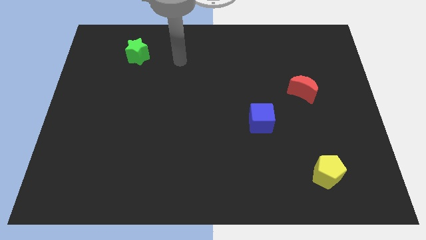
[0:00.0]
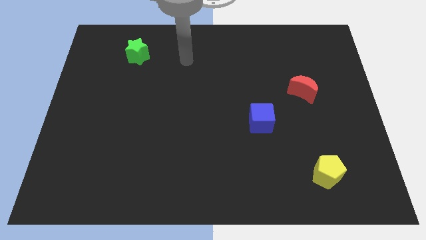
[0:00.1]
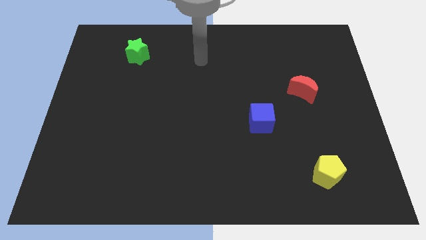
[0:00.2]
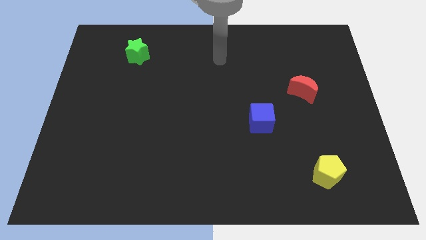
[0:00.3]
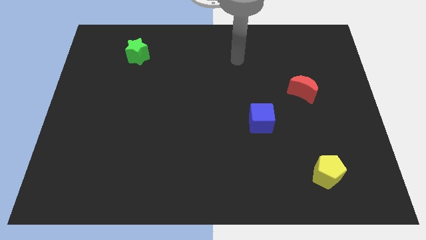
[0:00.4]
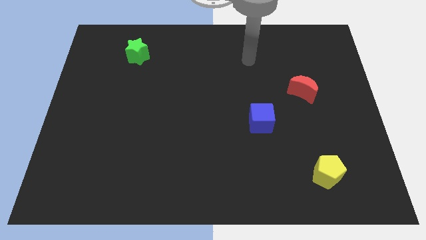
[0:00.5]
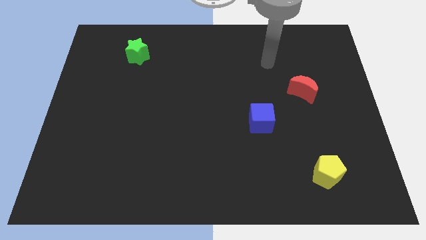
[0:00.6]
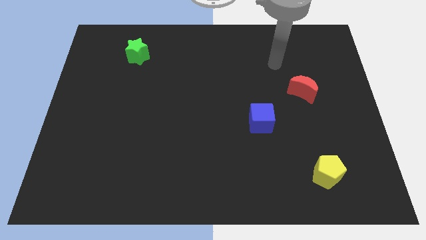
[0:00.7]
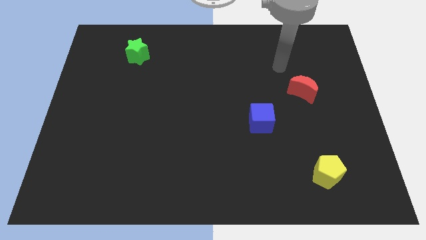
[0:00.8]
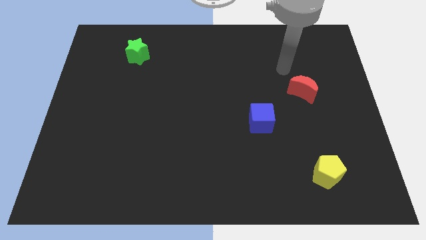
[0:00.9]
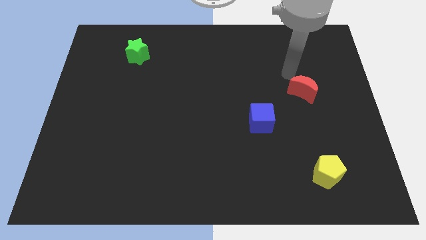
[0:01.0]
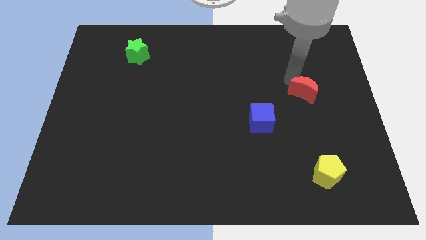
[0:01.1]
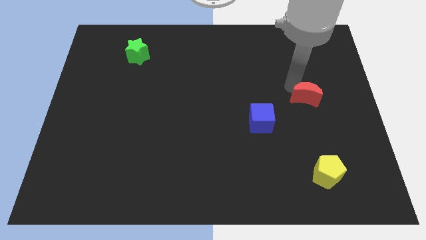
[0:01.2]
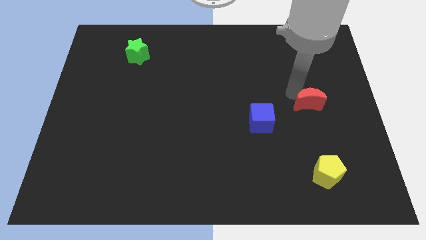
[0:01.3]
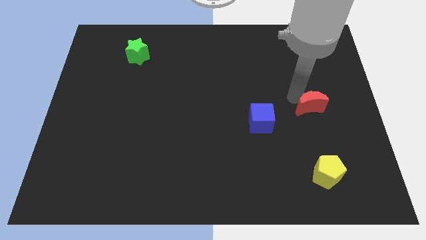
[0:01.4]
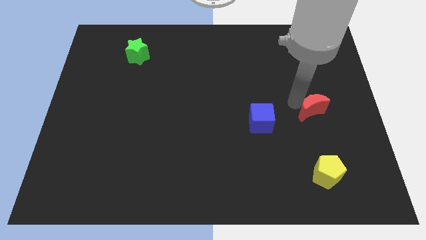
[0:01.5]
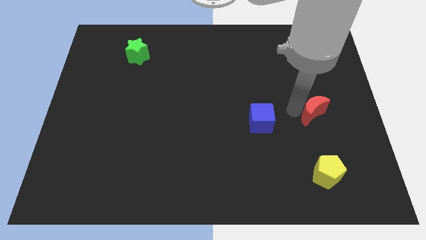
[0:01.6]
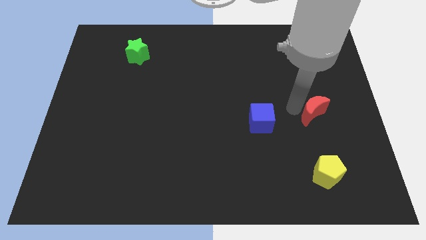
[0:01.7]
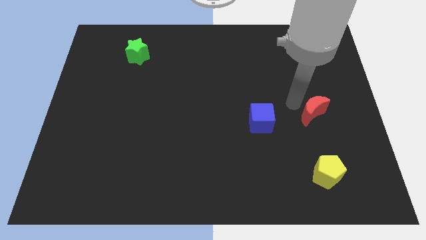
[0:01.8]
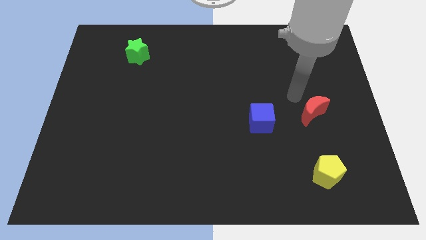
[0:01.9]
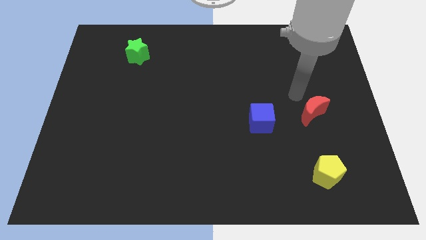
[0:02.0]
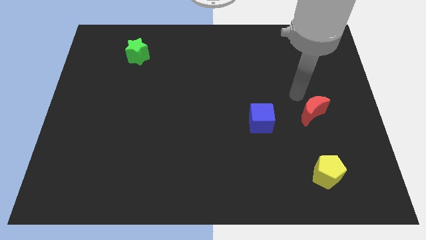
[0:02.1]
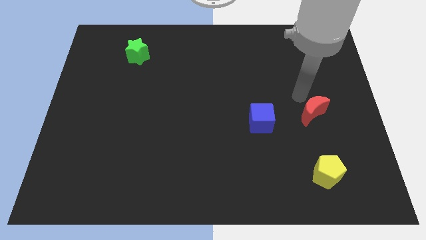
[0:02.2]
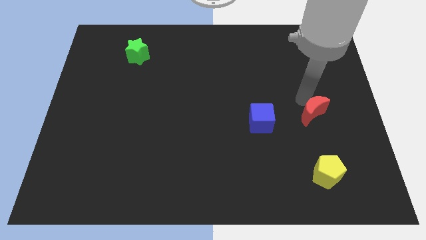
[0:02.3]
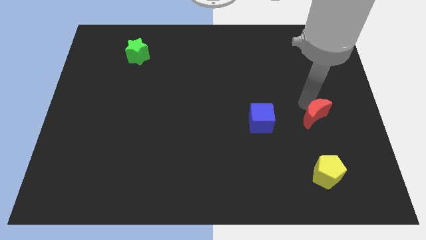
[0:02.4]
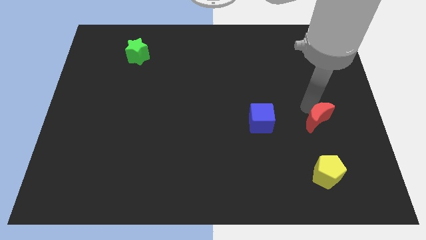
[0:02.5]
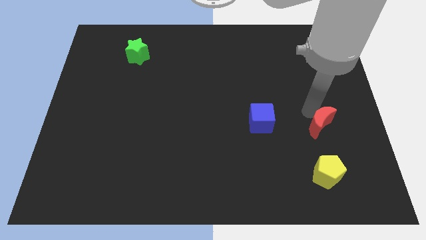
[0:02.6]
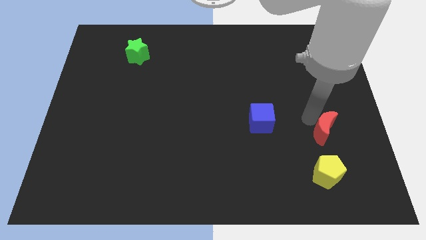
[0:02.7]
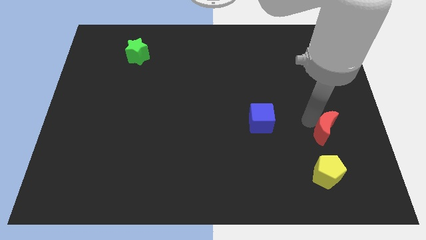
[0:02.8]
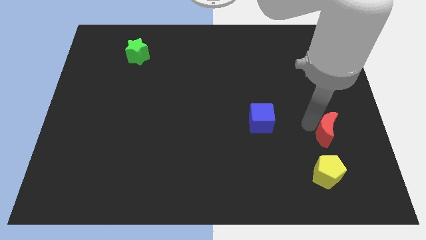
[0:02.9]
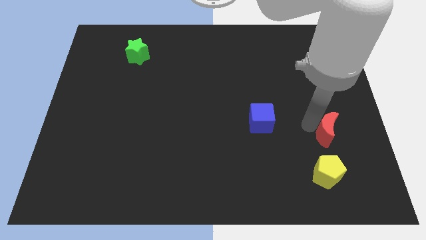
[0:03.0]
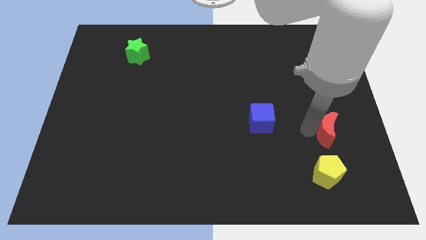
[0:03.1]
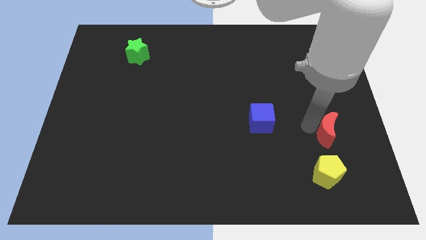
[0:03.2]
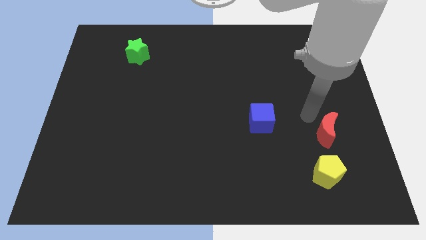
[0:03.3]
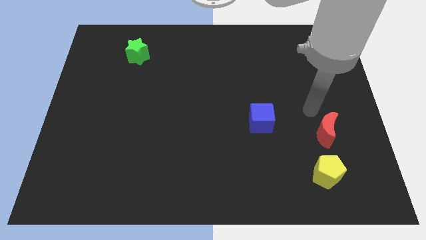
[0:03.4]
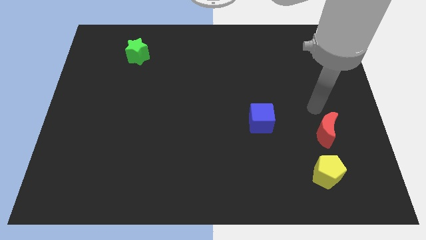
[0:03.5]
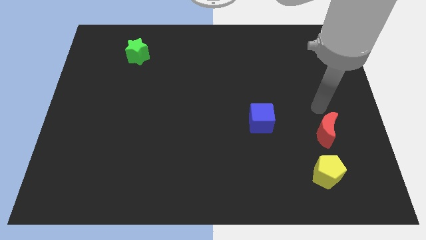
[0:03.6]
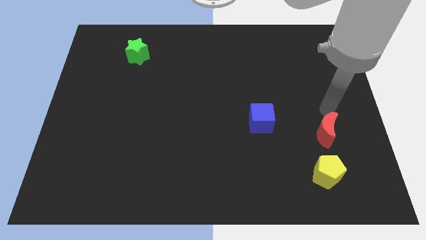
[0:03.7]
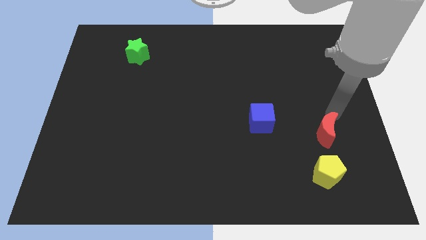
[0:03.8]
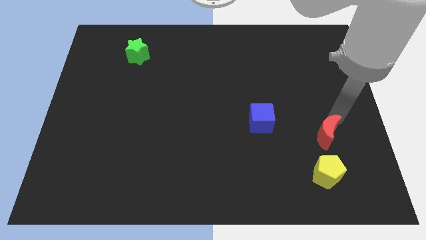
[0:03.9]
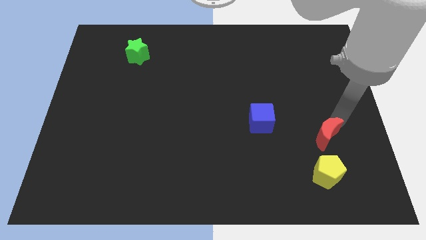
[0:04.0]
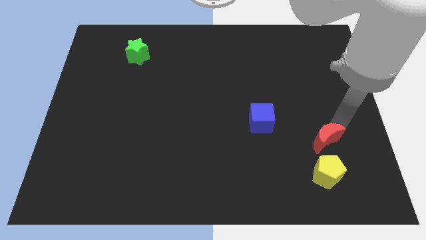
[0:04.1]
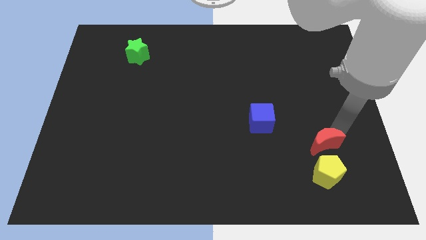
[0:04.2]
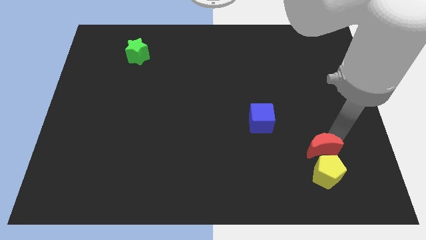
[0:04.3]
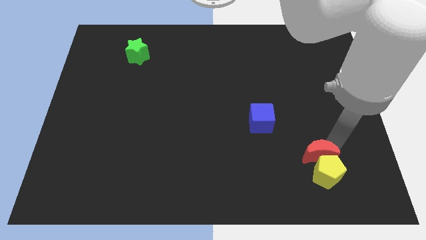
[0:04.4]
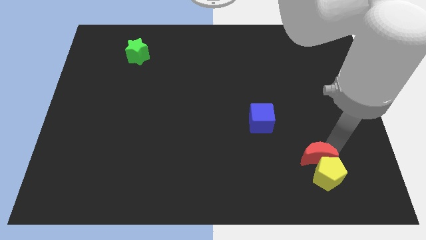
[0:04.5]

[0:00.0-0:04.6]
put the red block towards the pentagon

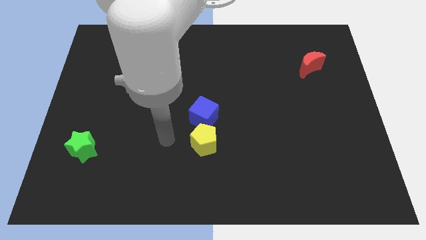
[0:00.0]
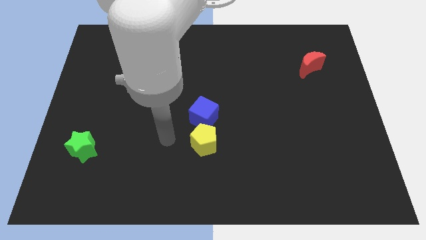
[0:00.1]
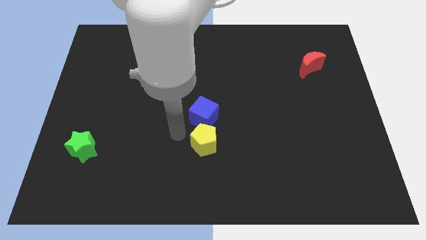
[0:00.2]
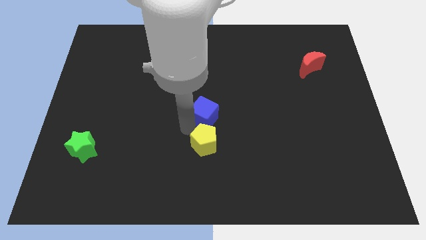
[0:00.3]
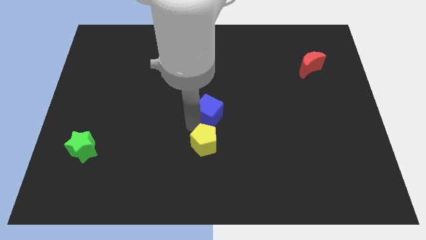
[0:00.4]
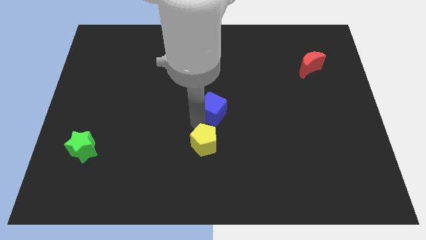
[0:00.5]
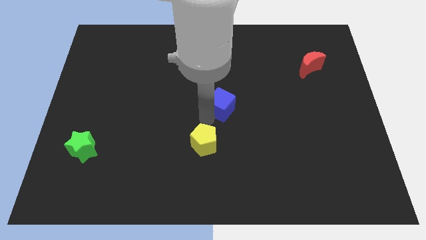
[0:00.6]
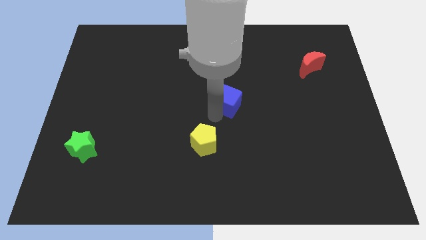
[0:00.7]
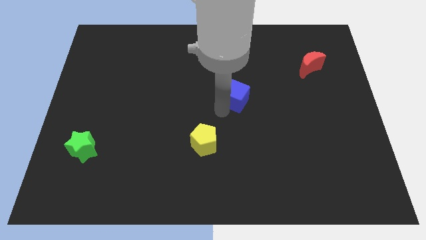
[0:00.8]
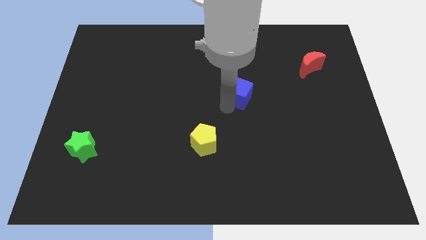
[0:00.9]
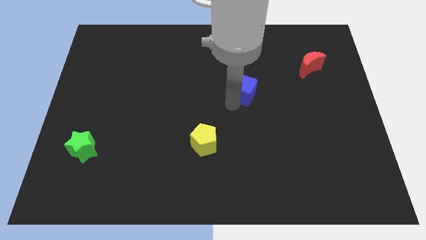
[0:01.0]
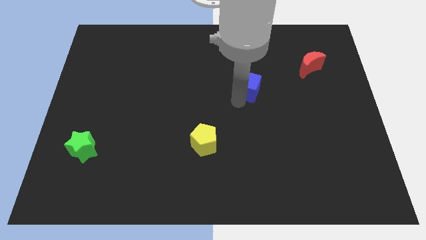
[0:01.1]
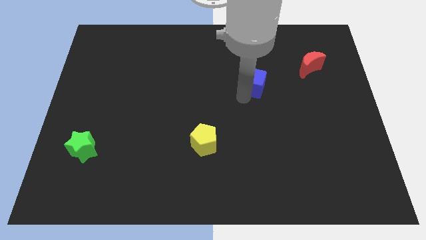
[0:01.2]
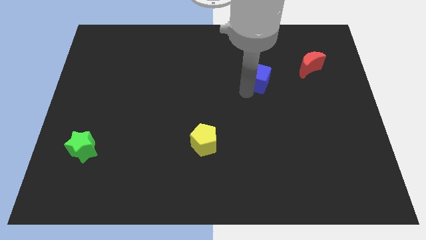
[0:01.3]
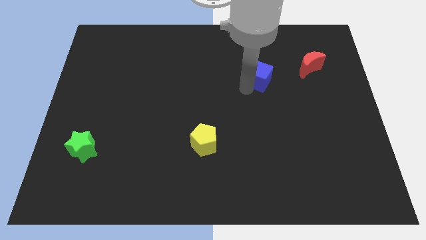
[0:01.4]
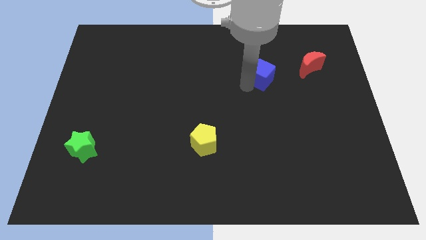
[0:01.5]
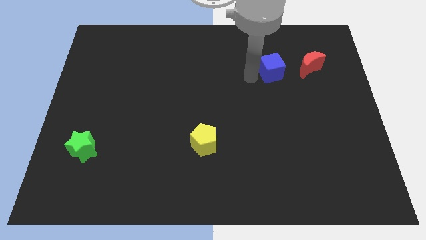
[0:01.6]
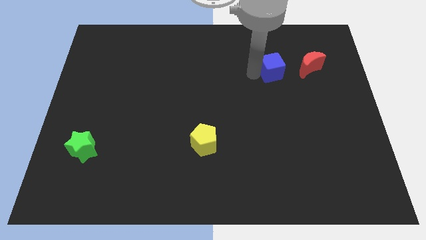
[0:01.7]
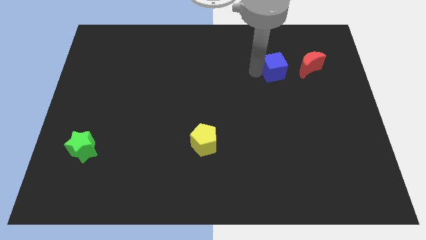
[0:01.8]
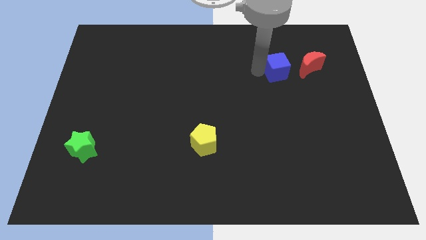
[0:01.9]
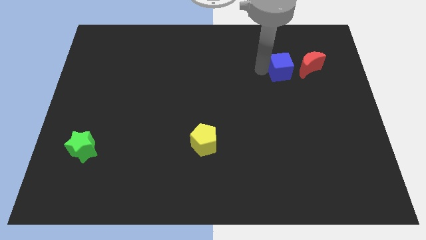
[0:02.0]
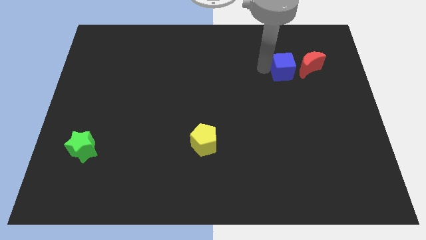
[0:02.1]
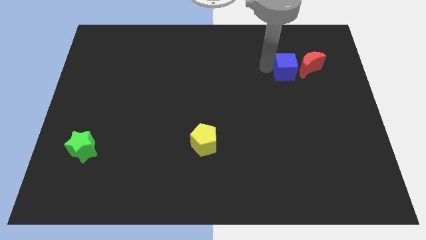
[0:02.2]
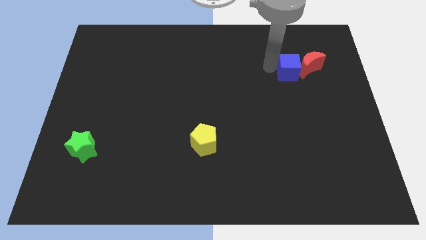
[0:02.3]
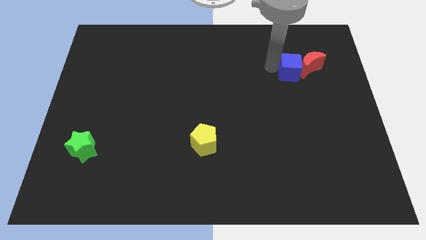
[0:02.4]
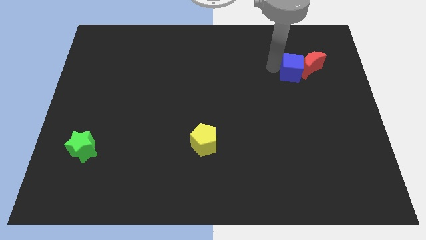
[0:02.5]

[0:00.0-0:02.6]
slide the blue block towards the red moon

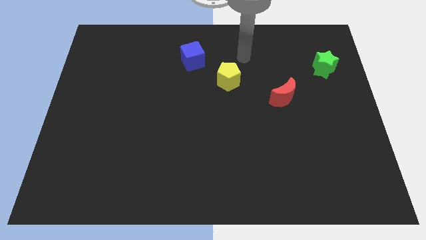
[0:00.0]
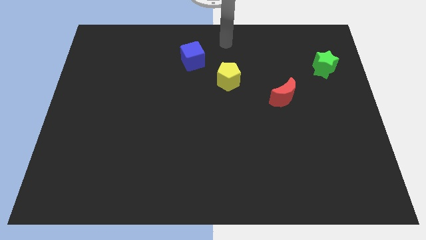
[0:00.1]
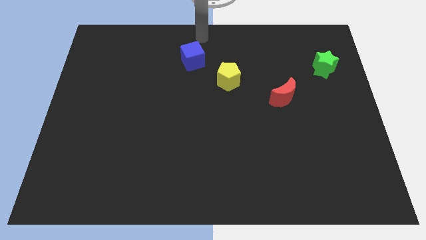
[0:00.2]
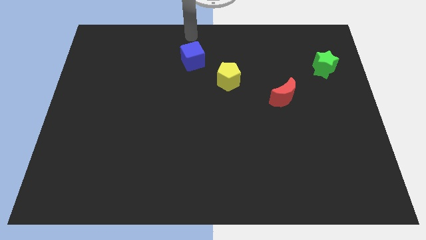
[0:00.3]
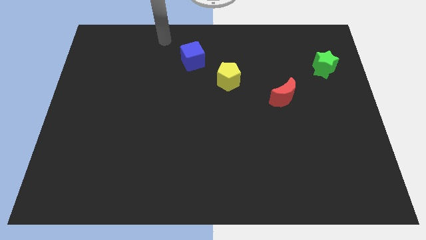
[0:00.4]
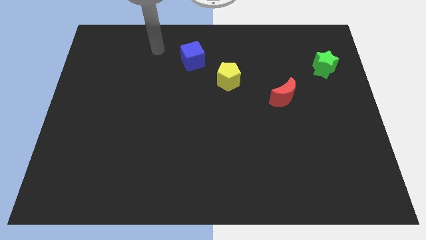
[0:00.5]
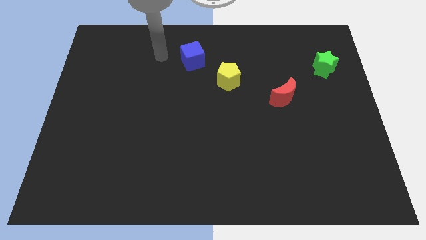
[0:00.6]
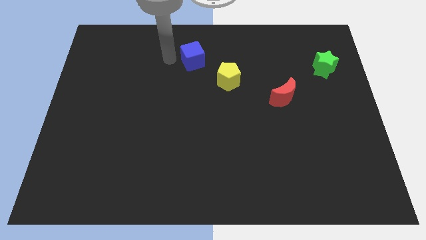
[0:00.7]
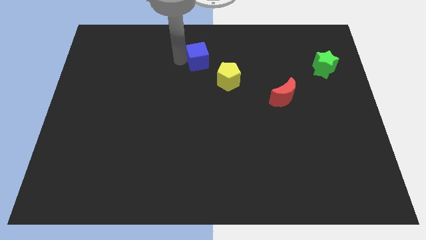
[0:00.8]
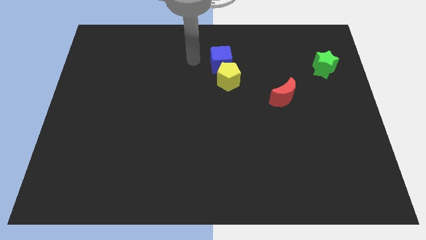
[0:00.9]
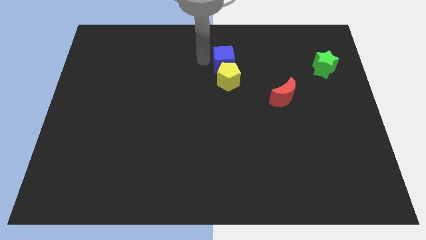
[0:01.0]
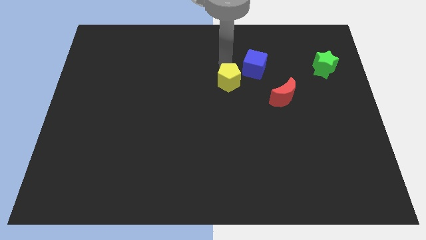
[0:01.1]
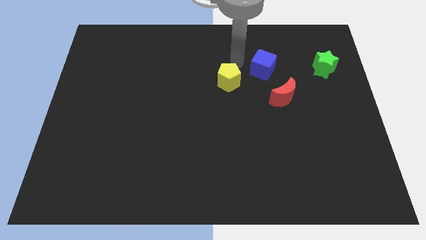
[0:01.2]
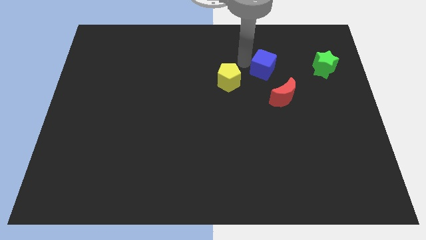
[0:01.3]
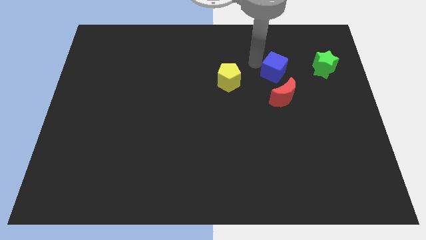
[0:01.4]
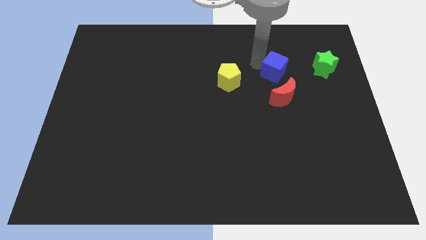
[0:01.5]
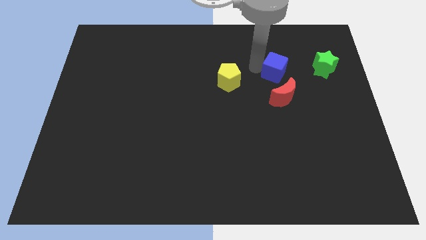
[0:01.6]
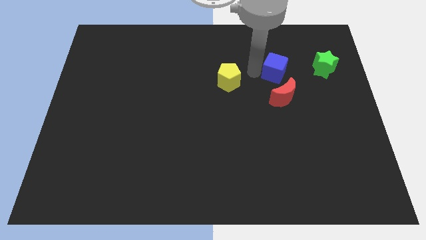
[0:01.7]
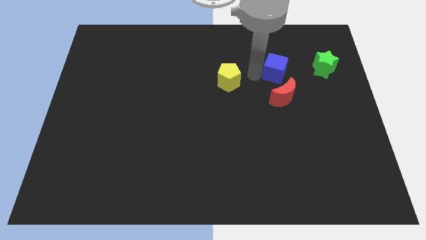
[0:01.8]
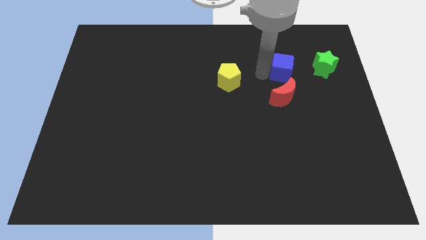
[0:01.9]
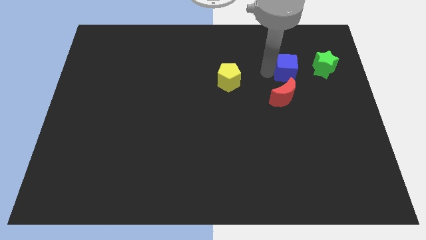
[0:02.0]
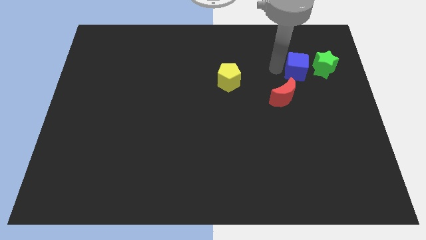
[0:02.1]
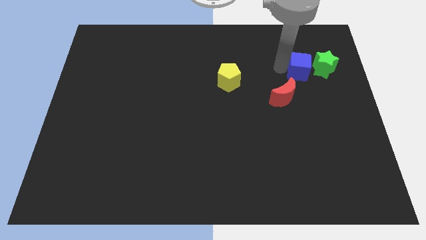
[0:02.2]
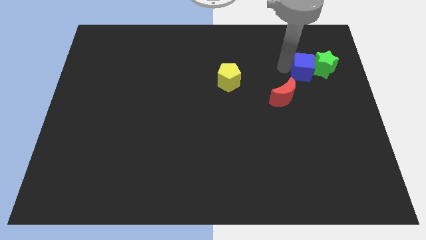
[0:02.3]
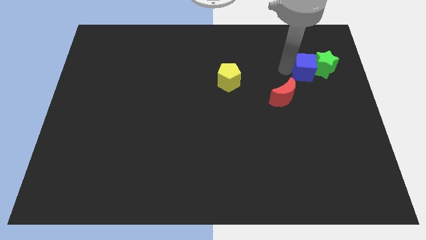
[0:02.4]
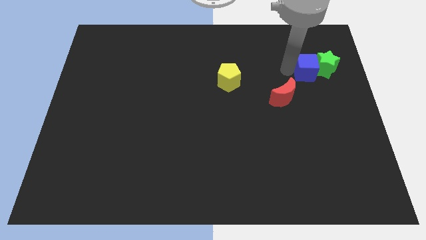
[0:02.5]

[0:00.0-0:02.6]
push the blue block to the green block
